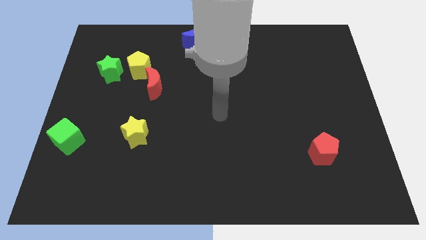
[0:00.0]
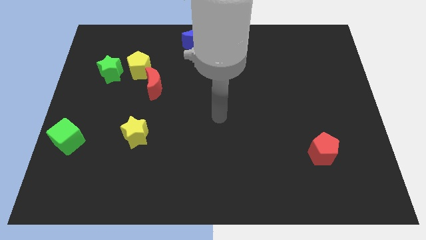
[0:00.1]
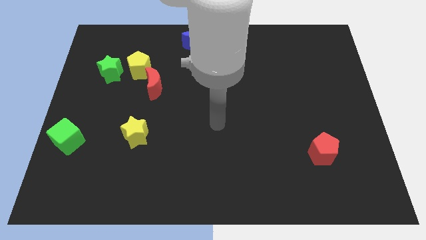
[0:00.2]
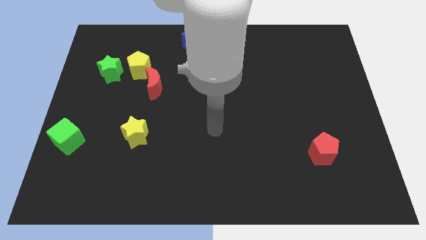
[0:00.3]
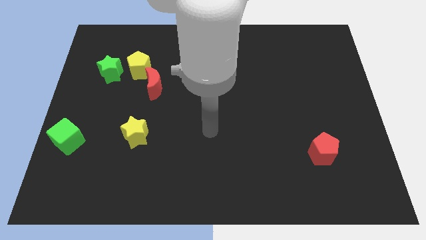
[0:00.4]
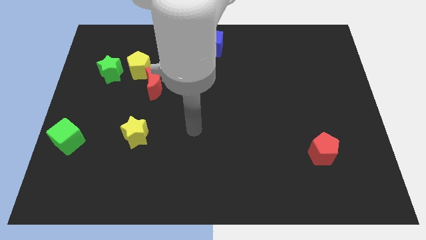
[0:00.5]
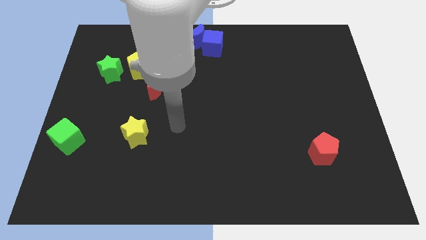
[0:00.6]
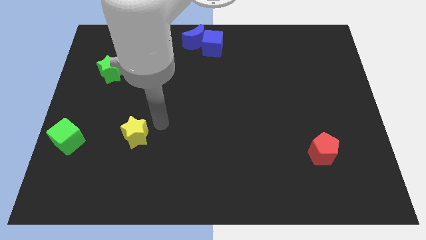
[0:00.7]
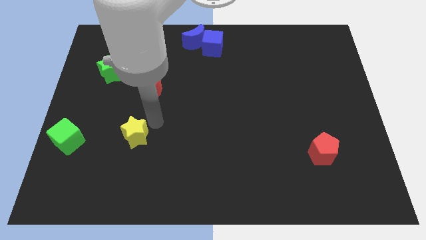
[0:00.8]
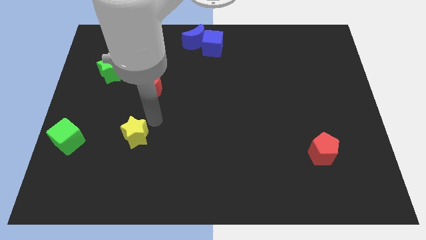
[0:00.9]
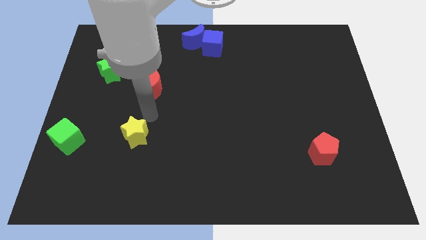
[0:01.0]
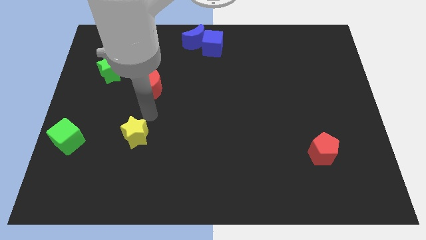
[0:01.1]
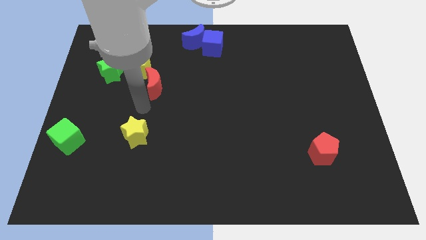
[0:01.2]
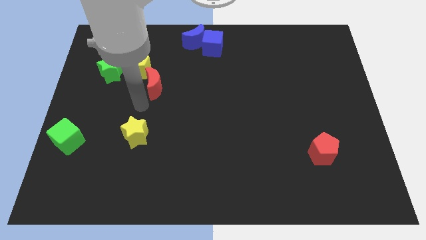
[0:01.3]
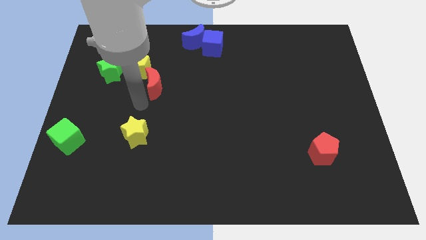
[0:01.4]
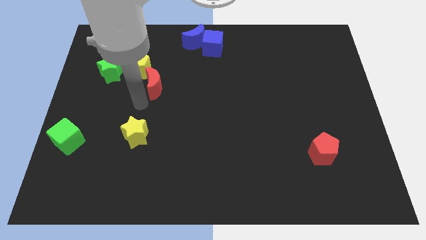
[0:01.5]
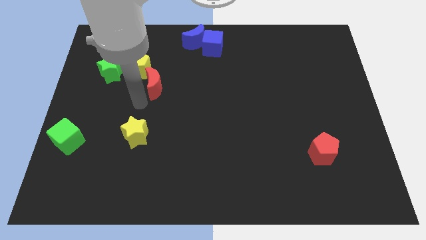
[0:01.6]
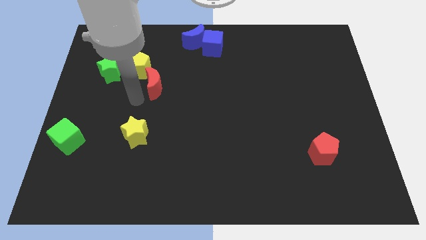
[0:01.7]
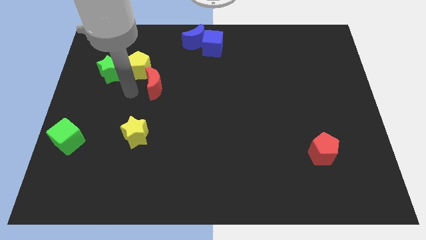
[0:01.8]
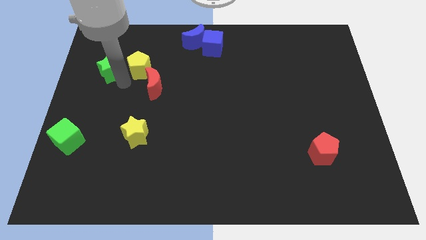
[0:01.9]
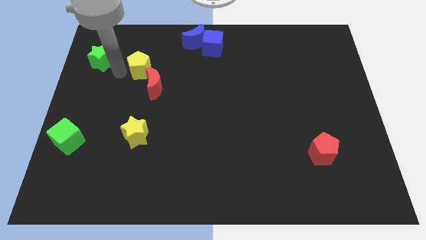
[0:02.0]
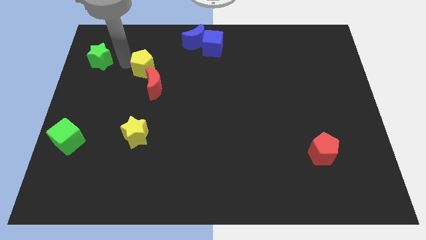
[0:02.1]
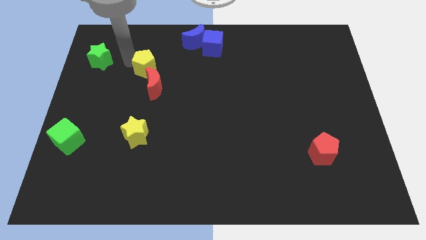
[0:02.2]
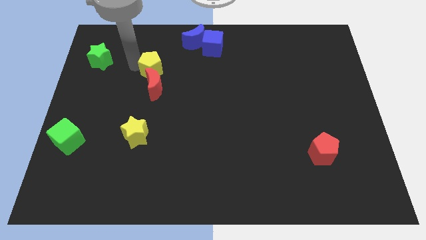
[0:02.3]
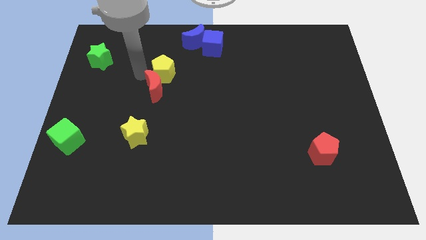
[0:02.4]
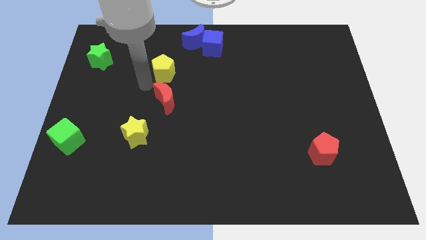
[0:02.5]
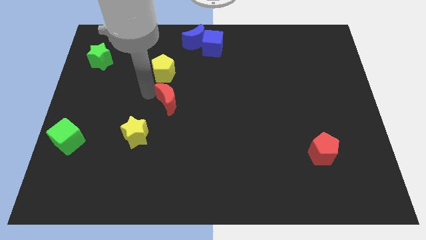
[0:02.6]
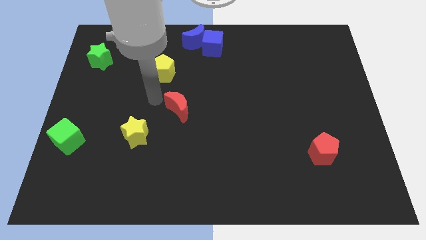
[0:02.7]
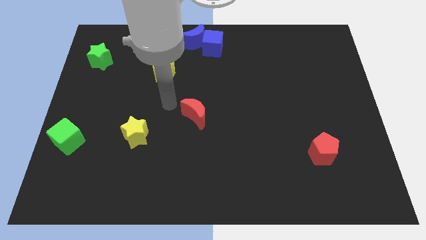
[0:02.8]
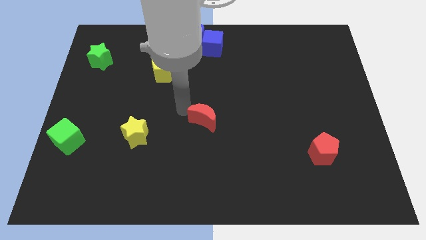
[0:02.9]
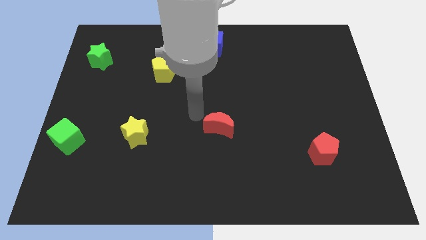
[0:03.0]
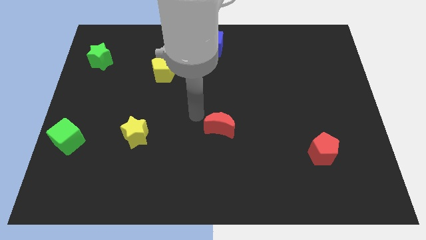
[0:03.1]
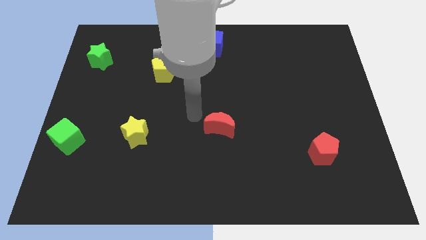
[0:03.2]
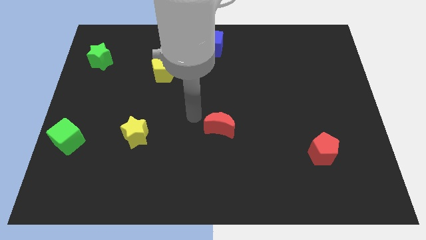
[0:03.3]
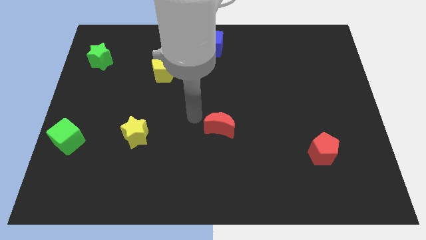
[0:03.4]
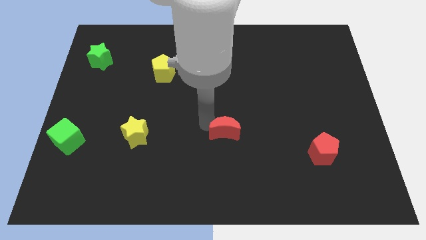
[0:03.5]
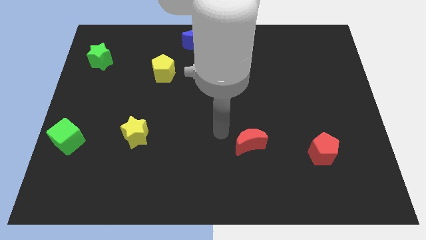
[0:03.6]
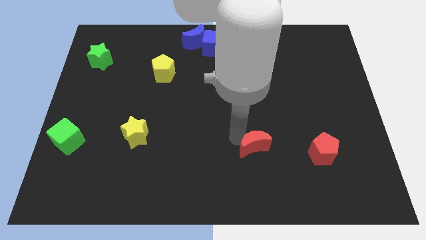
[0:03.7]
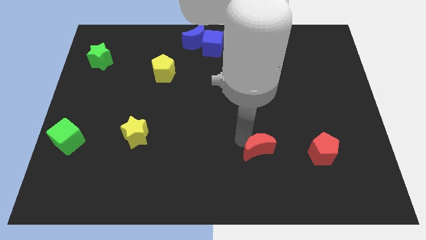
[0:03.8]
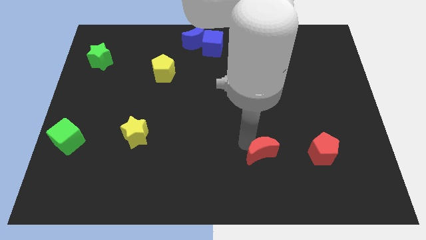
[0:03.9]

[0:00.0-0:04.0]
separate yellow pentagon and red moon

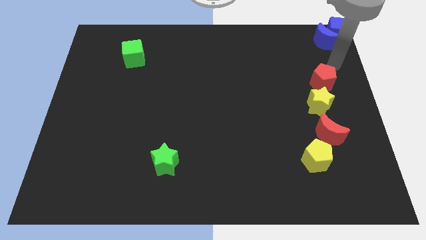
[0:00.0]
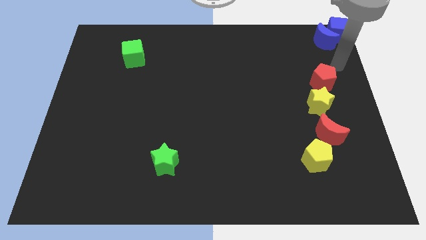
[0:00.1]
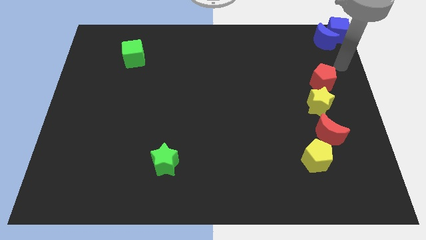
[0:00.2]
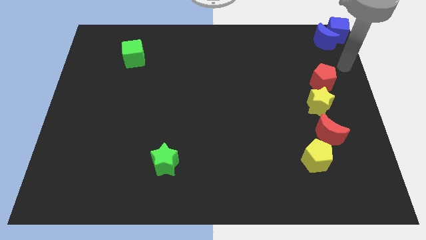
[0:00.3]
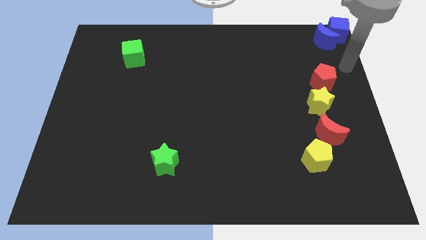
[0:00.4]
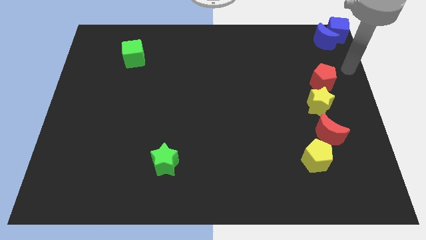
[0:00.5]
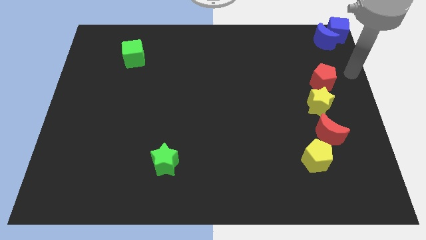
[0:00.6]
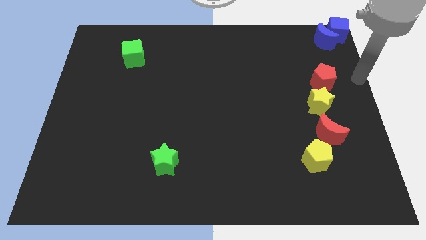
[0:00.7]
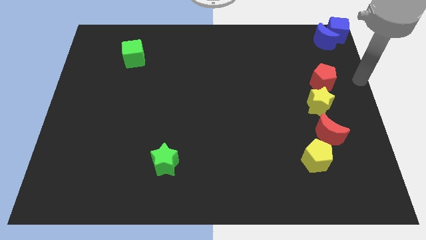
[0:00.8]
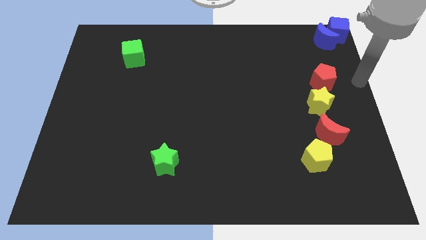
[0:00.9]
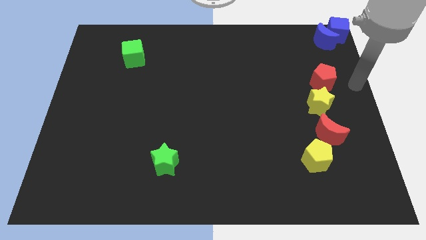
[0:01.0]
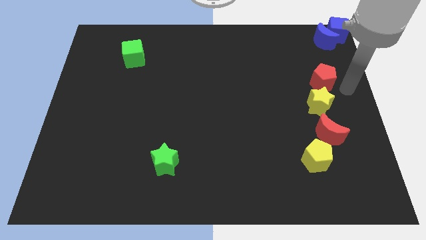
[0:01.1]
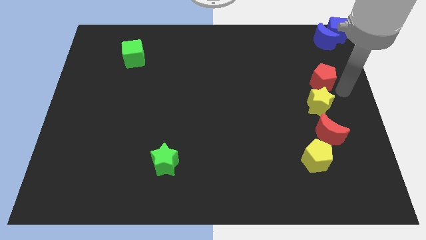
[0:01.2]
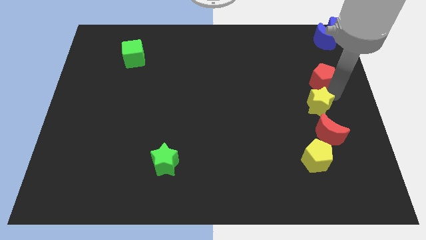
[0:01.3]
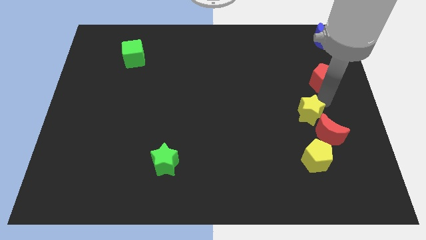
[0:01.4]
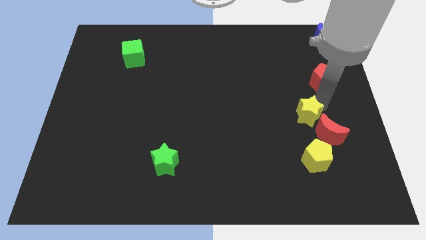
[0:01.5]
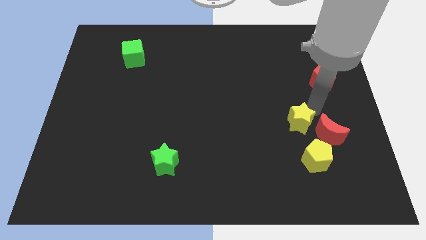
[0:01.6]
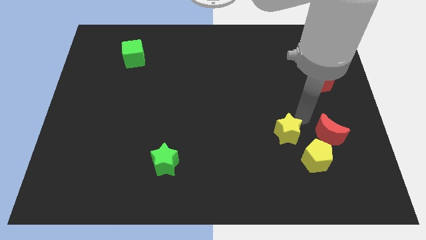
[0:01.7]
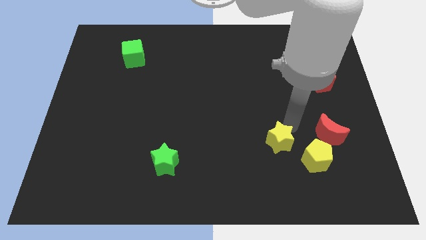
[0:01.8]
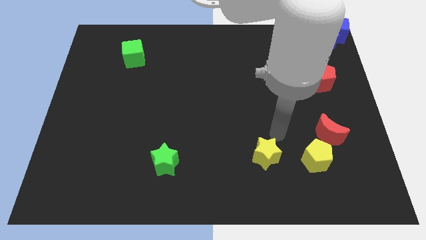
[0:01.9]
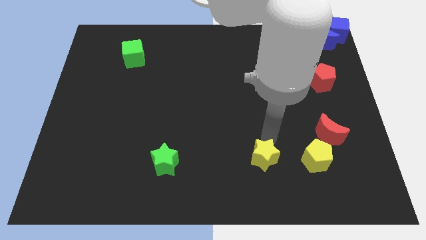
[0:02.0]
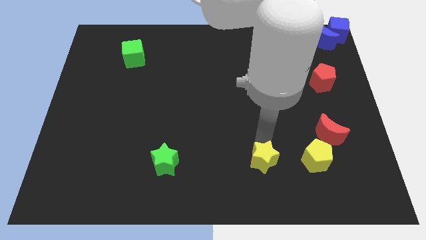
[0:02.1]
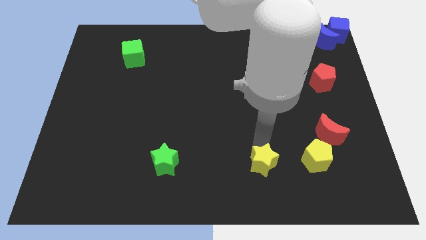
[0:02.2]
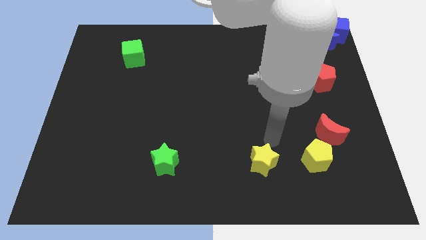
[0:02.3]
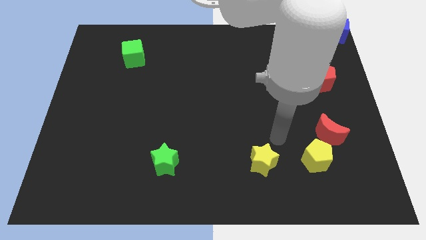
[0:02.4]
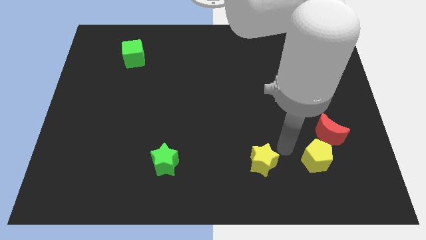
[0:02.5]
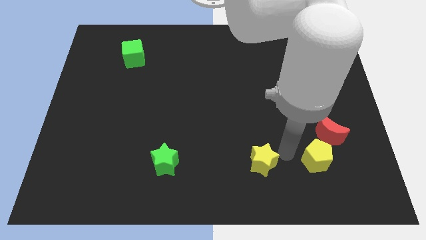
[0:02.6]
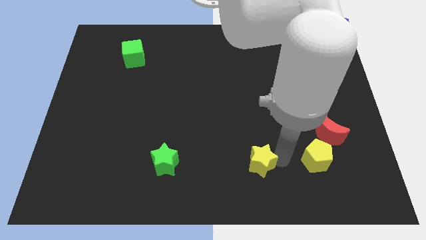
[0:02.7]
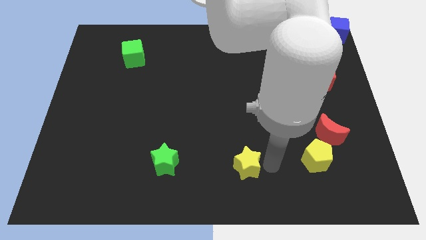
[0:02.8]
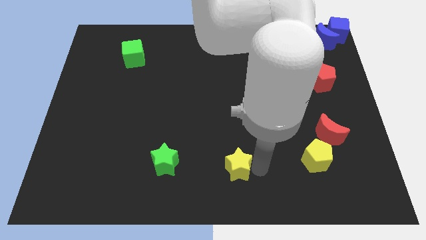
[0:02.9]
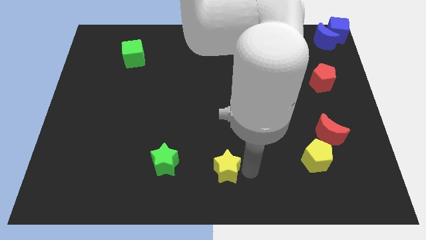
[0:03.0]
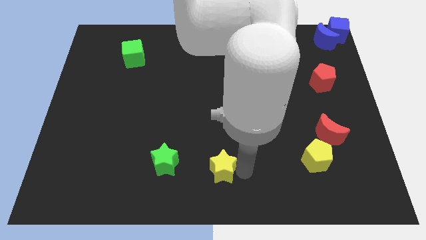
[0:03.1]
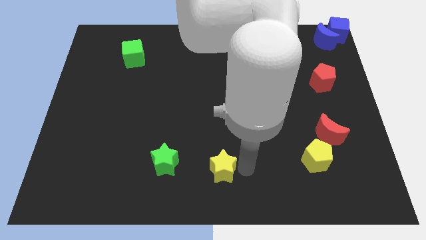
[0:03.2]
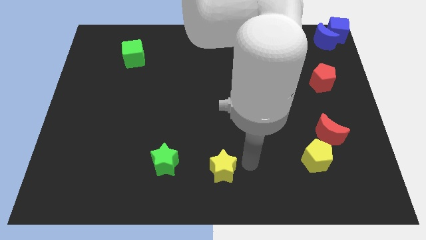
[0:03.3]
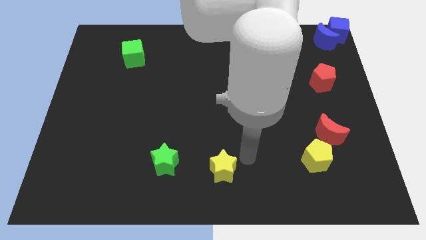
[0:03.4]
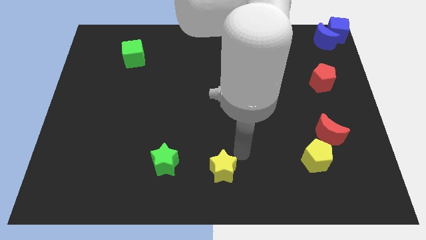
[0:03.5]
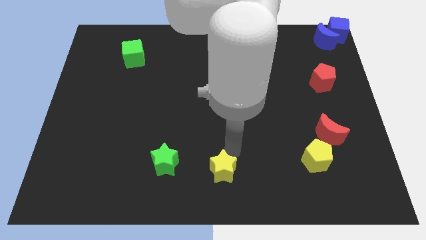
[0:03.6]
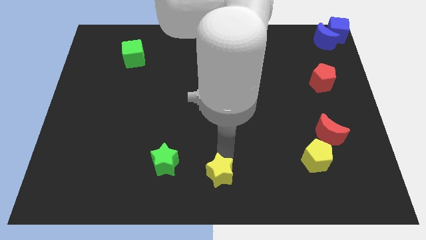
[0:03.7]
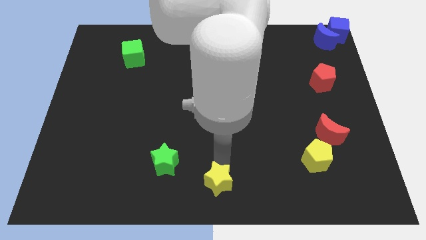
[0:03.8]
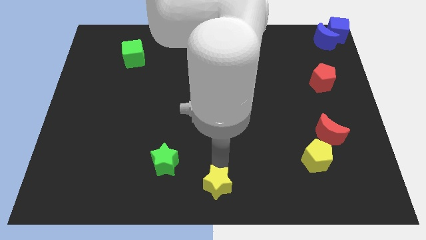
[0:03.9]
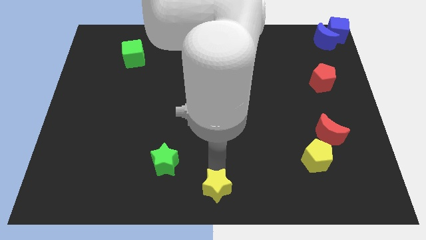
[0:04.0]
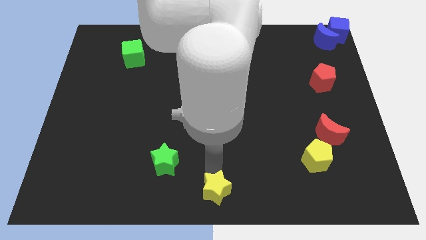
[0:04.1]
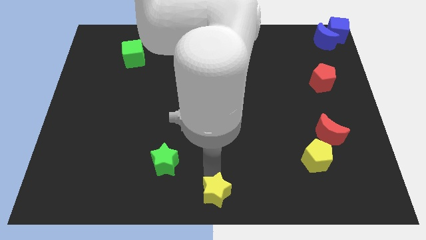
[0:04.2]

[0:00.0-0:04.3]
move the yellow star to the bottom of the board

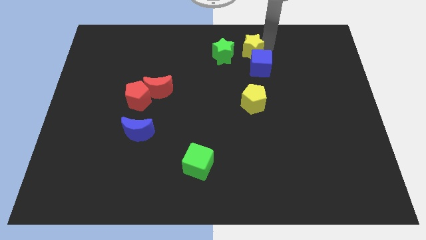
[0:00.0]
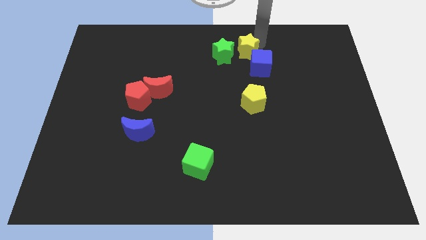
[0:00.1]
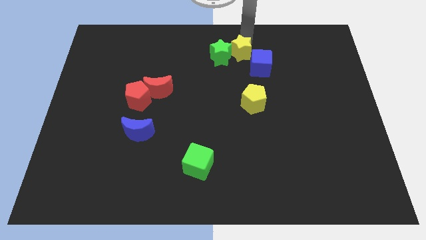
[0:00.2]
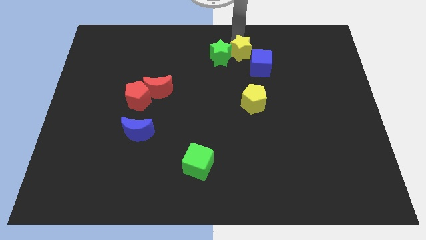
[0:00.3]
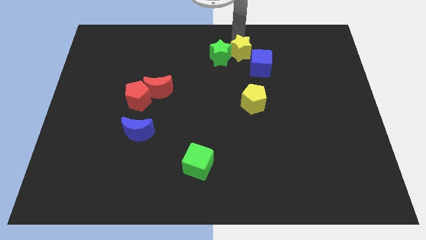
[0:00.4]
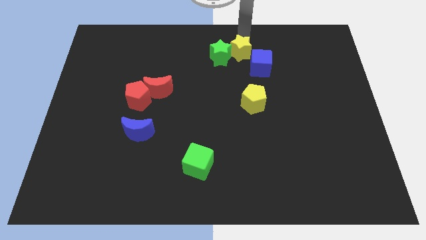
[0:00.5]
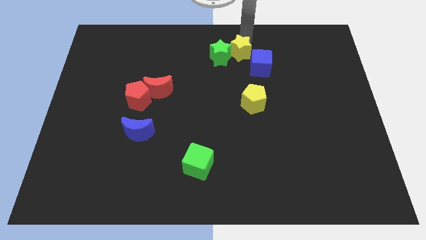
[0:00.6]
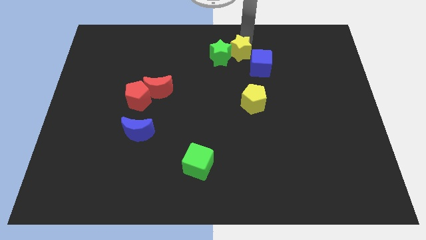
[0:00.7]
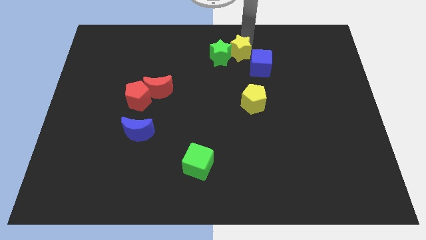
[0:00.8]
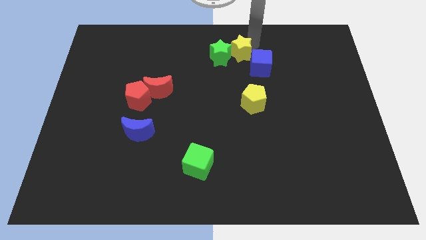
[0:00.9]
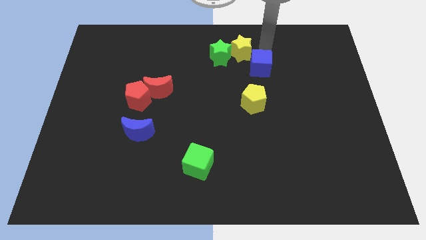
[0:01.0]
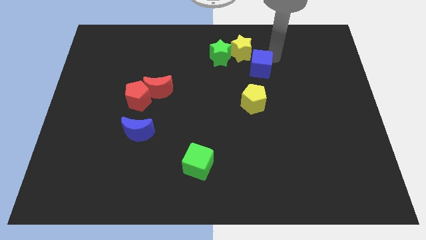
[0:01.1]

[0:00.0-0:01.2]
put yellow star on right to green star
